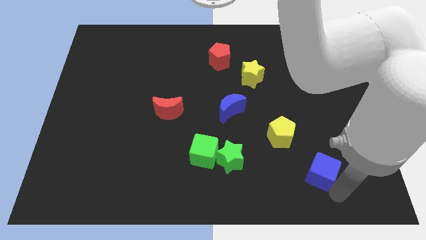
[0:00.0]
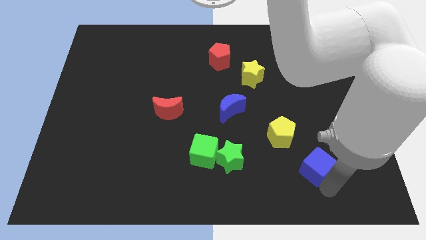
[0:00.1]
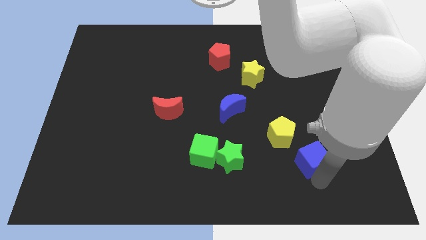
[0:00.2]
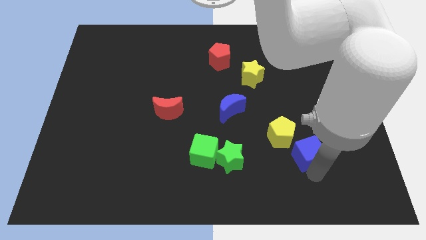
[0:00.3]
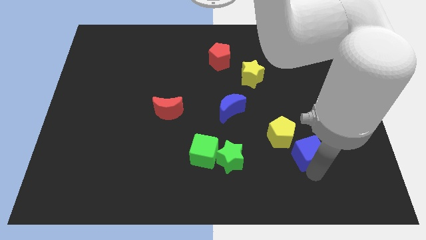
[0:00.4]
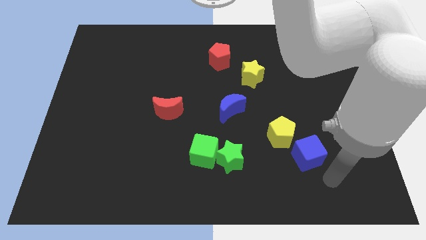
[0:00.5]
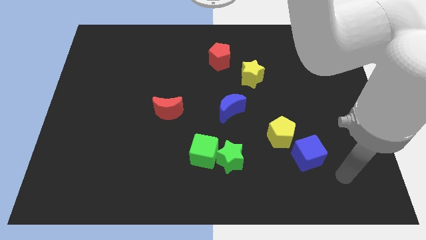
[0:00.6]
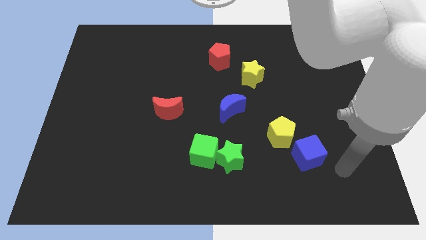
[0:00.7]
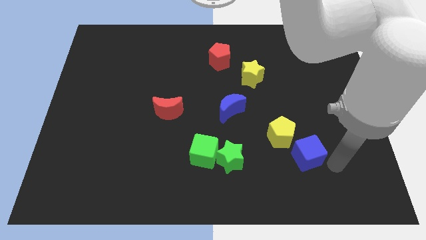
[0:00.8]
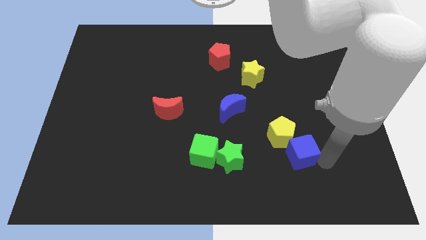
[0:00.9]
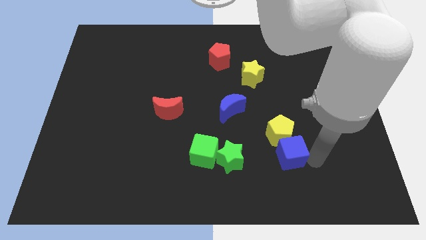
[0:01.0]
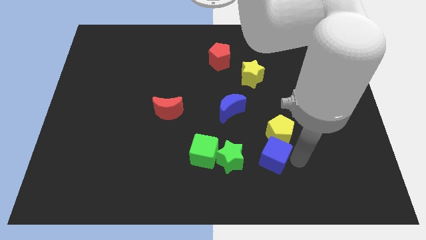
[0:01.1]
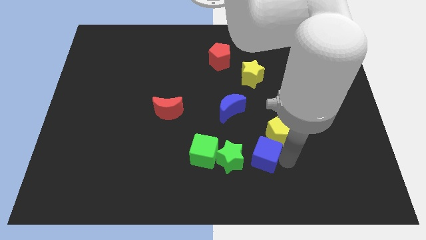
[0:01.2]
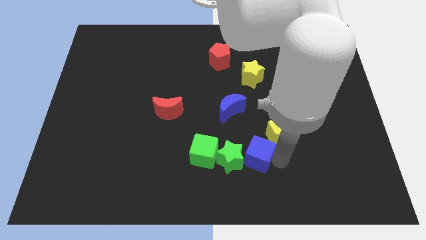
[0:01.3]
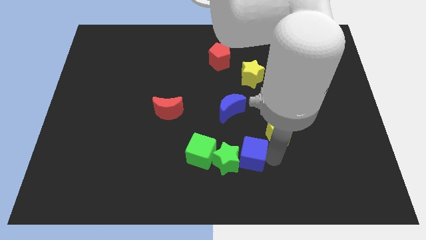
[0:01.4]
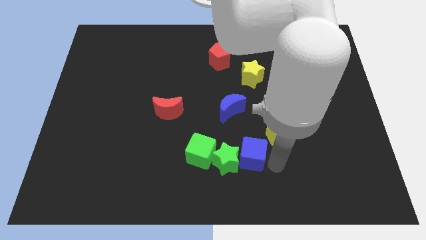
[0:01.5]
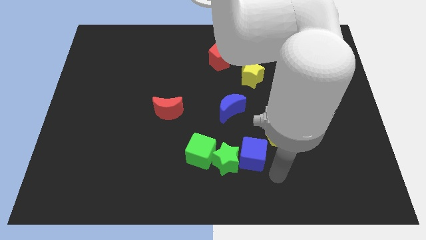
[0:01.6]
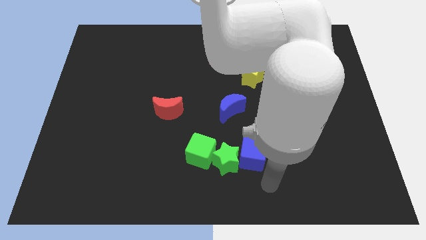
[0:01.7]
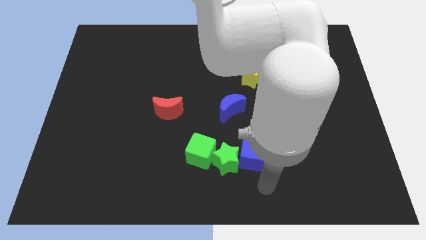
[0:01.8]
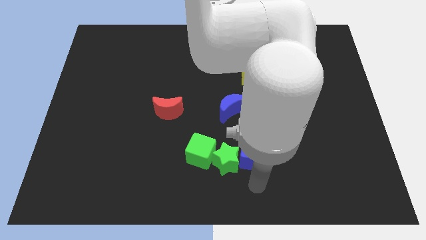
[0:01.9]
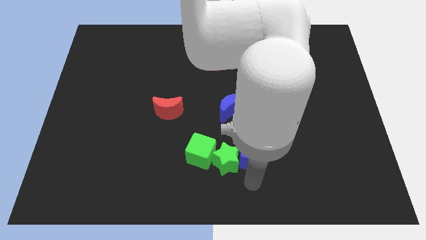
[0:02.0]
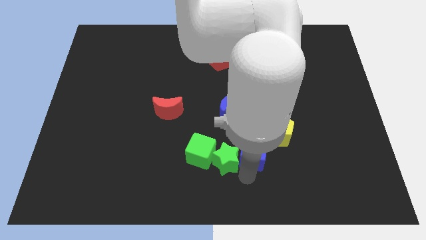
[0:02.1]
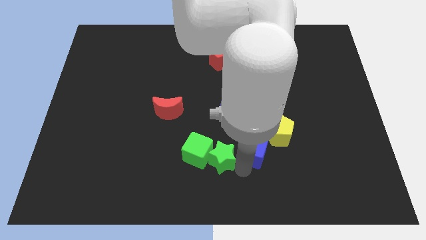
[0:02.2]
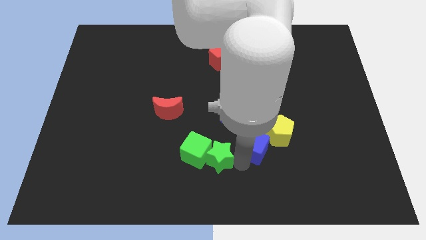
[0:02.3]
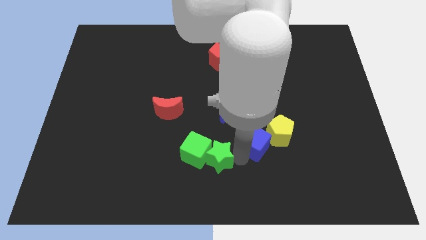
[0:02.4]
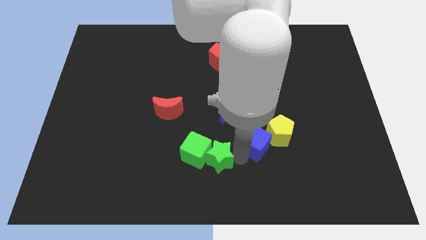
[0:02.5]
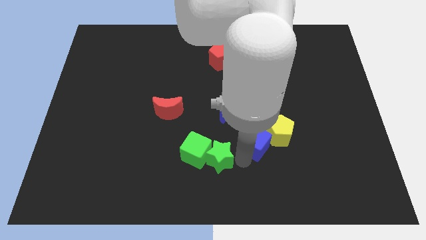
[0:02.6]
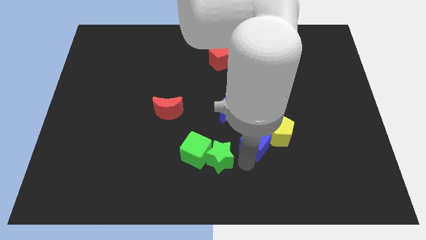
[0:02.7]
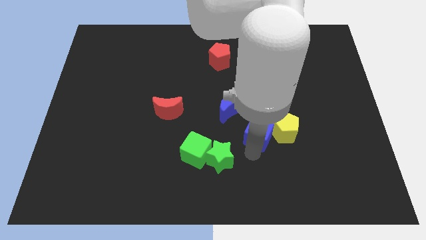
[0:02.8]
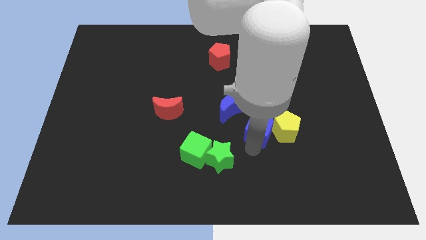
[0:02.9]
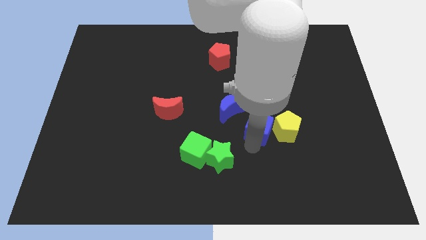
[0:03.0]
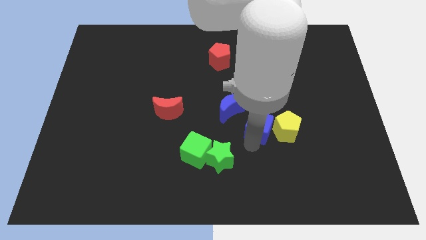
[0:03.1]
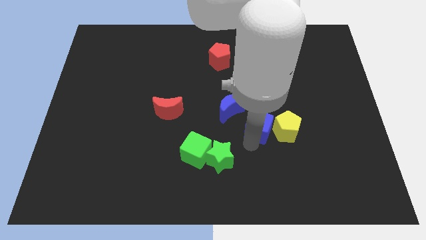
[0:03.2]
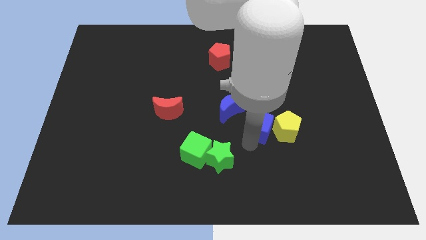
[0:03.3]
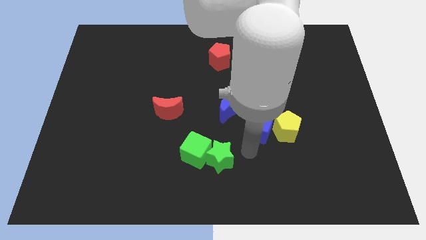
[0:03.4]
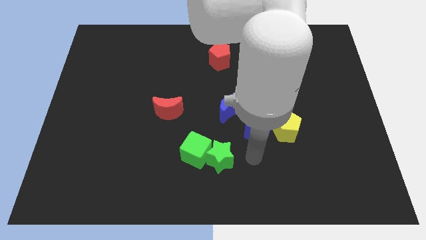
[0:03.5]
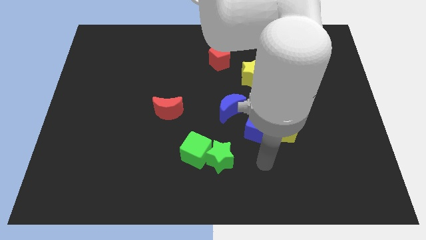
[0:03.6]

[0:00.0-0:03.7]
place blue cube to the left of yellow pentagon

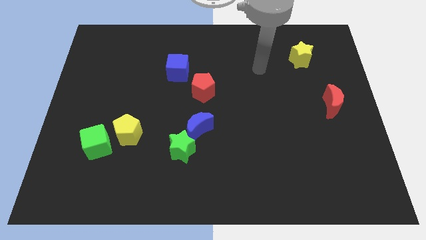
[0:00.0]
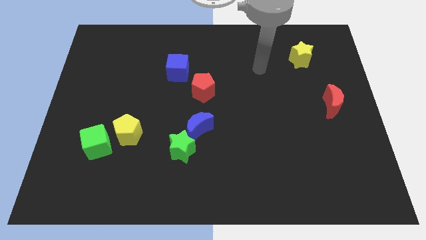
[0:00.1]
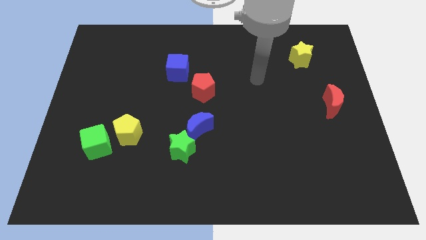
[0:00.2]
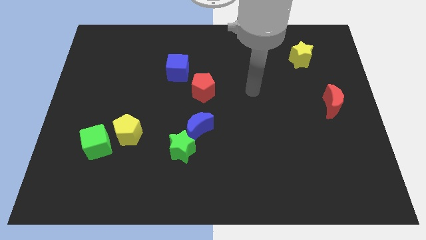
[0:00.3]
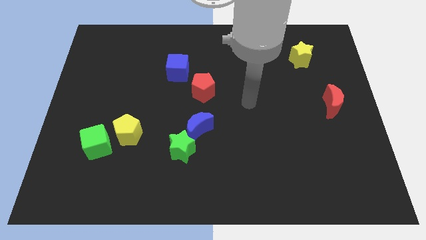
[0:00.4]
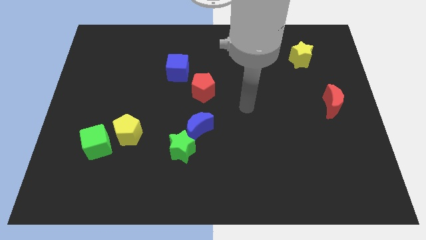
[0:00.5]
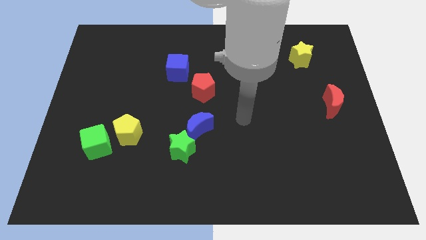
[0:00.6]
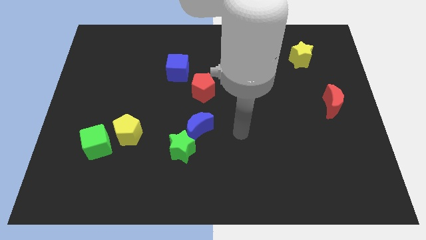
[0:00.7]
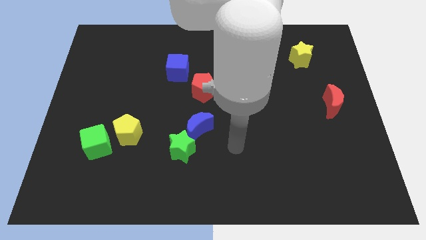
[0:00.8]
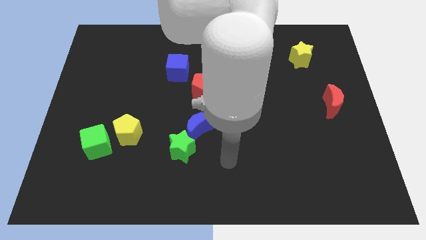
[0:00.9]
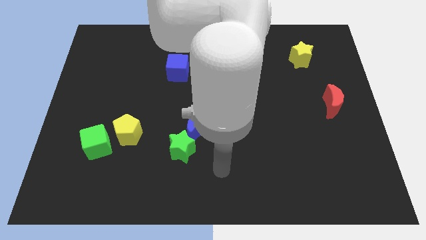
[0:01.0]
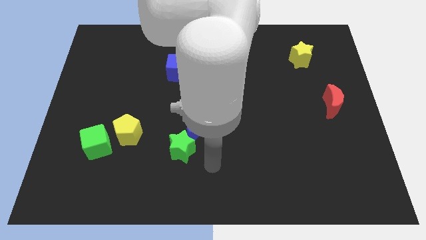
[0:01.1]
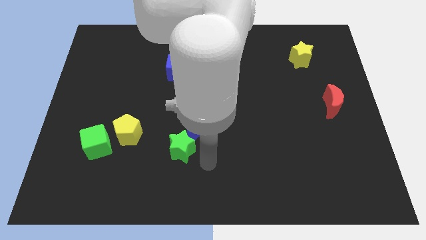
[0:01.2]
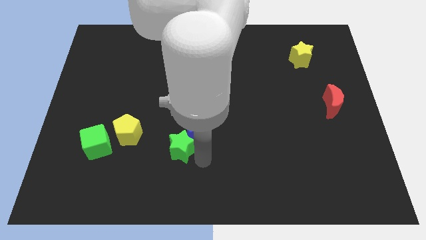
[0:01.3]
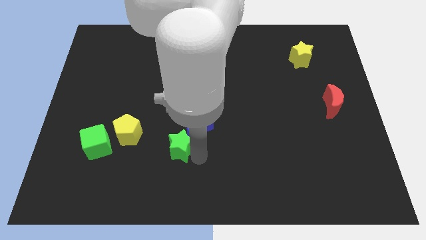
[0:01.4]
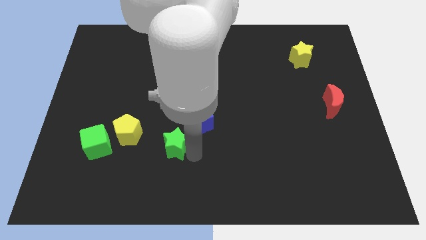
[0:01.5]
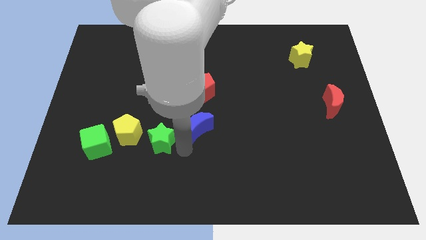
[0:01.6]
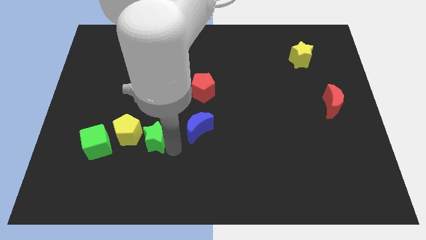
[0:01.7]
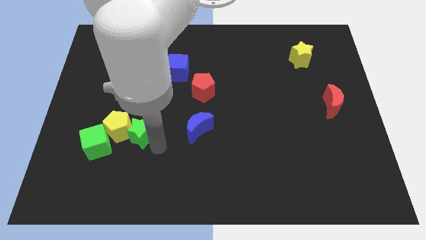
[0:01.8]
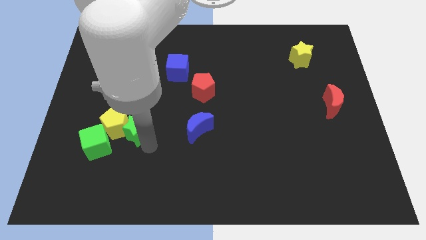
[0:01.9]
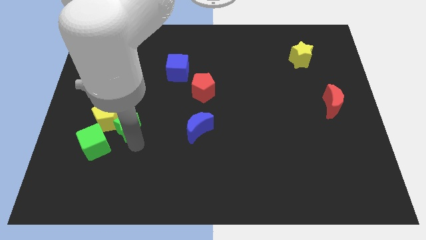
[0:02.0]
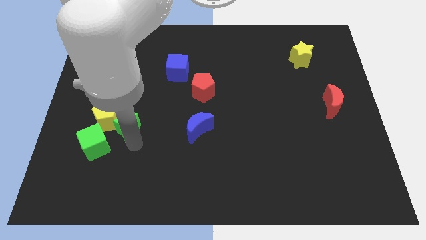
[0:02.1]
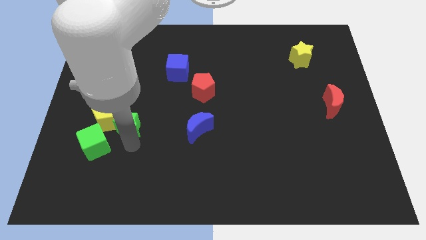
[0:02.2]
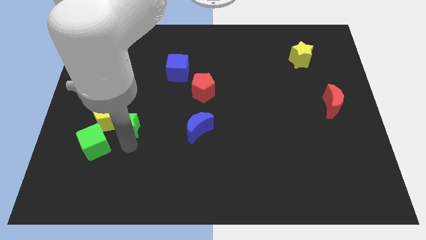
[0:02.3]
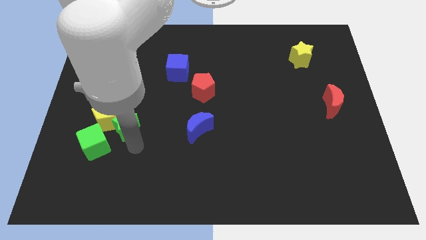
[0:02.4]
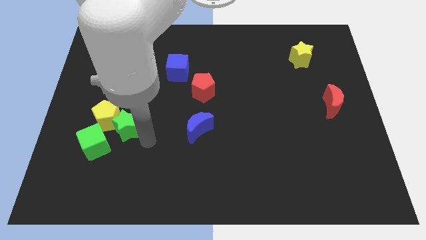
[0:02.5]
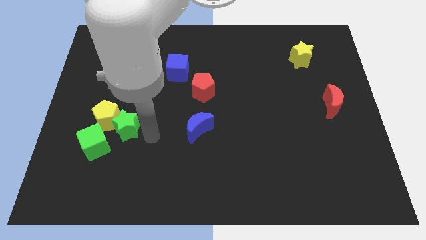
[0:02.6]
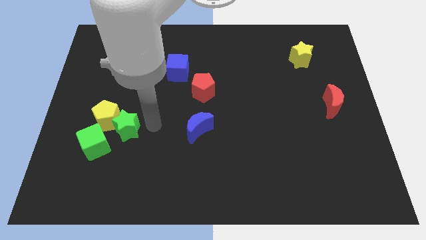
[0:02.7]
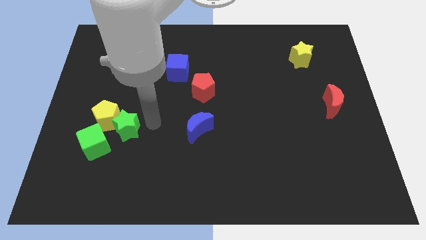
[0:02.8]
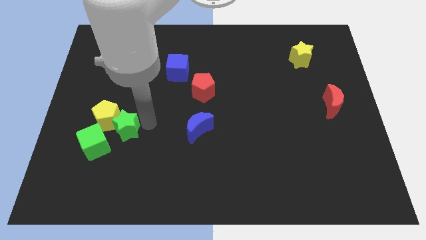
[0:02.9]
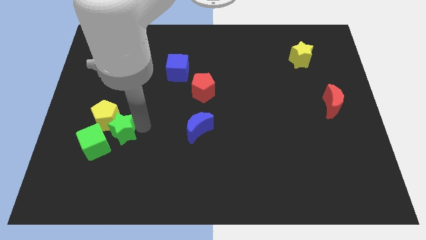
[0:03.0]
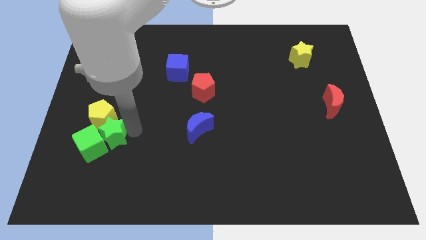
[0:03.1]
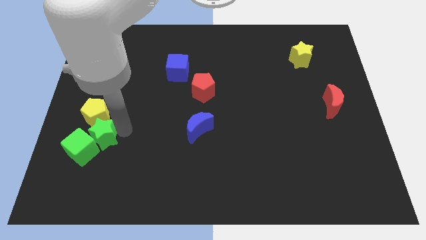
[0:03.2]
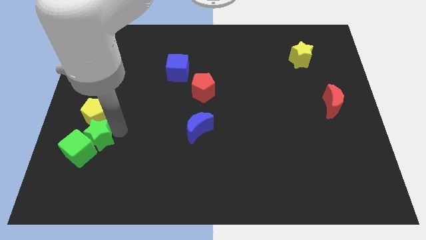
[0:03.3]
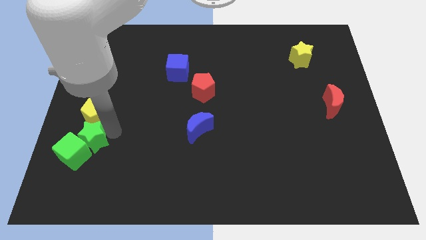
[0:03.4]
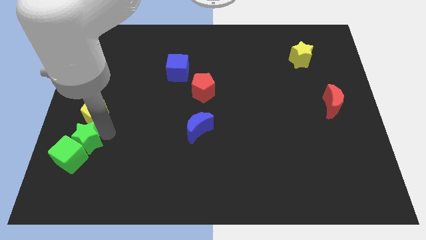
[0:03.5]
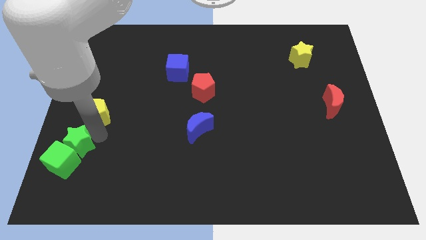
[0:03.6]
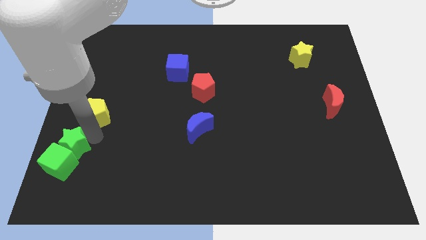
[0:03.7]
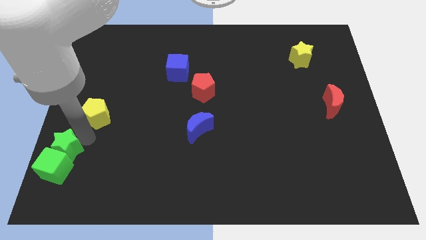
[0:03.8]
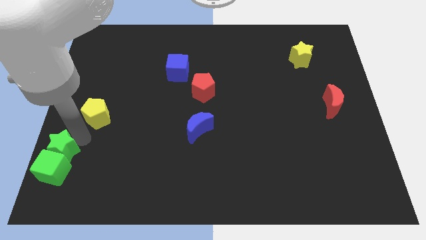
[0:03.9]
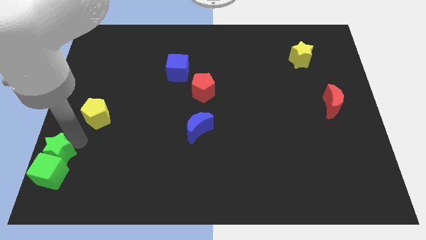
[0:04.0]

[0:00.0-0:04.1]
push the green star into the green cube

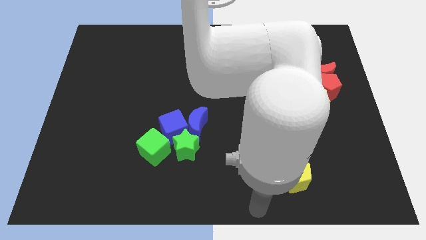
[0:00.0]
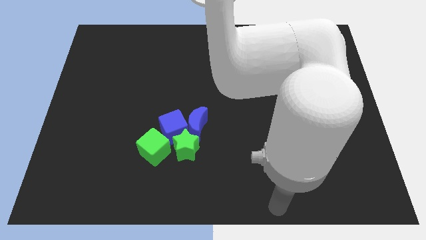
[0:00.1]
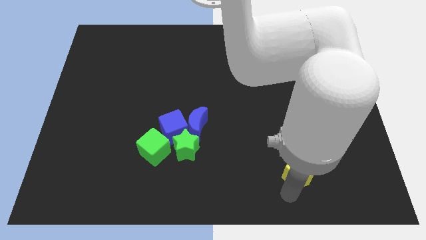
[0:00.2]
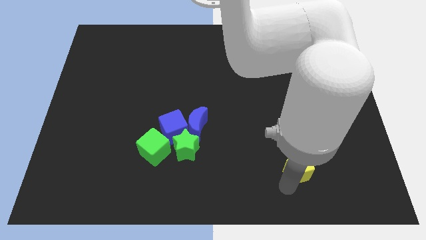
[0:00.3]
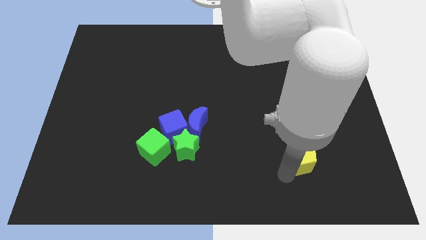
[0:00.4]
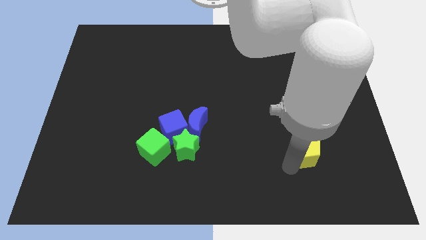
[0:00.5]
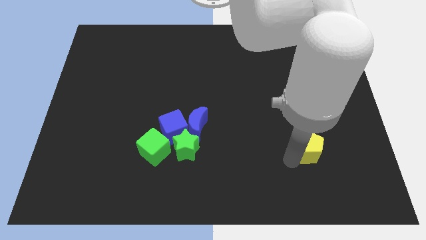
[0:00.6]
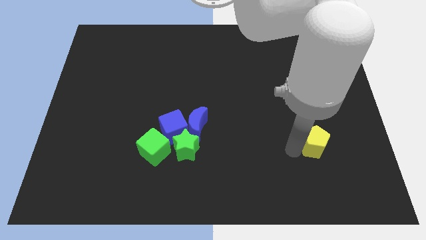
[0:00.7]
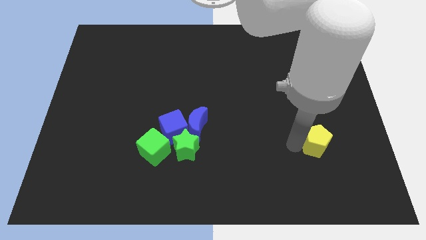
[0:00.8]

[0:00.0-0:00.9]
place the yellow pentagon parallel to the green star
